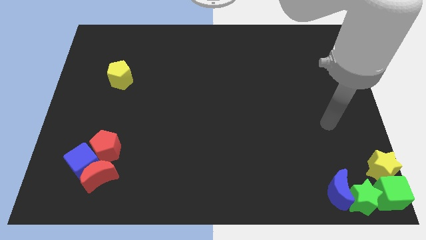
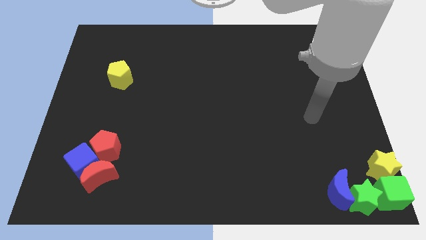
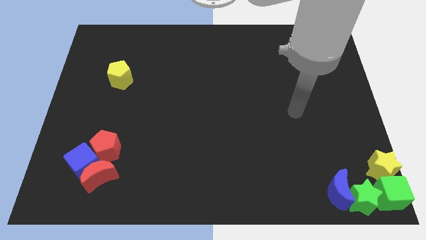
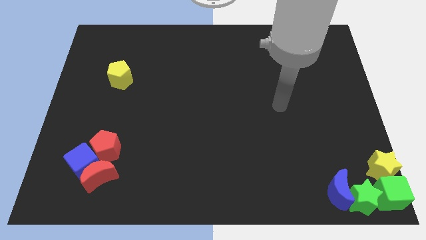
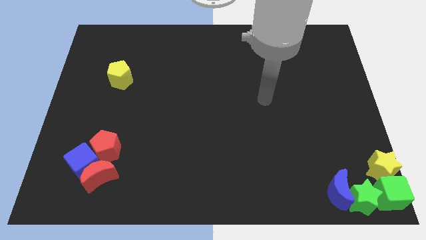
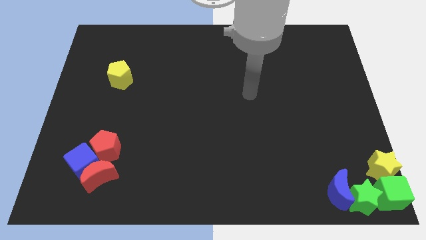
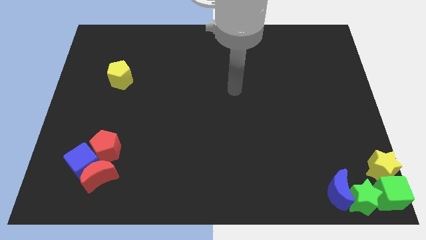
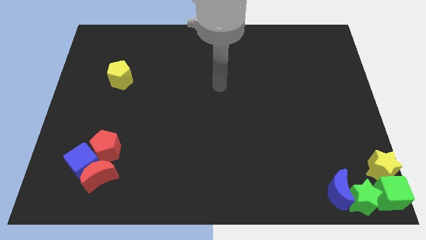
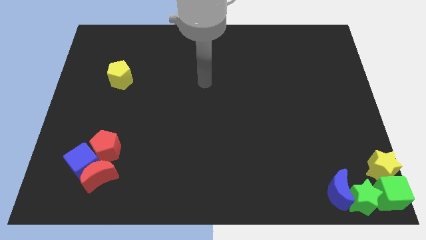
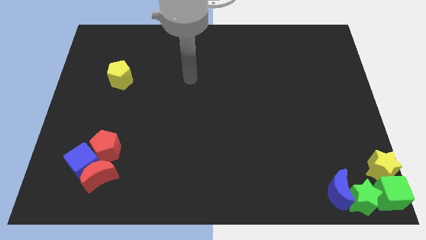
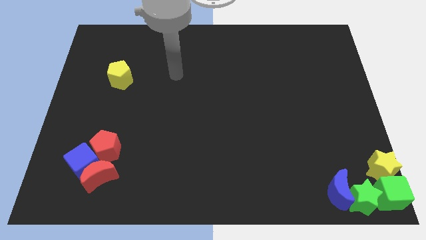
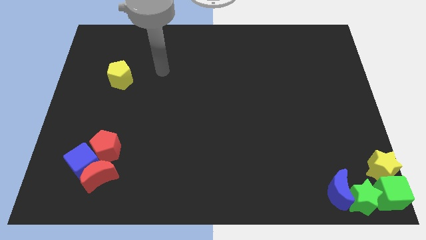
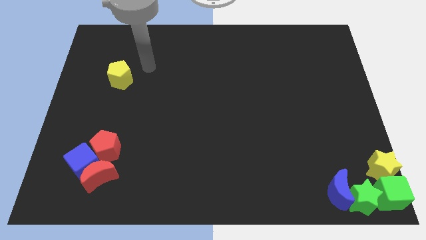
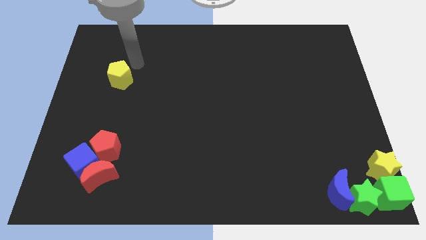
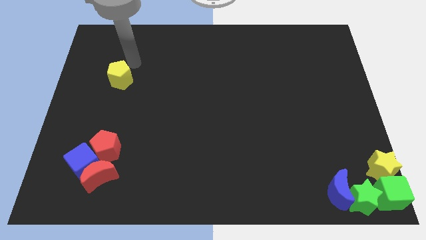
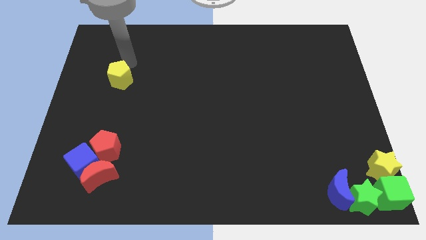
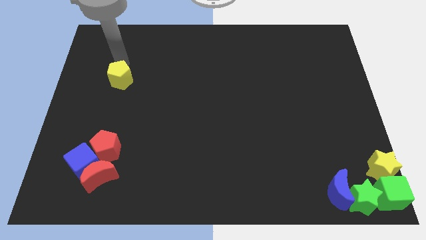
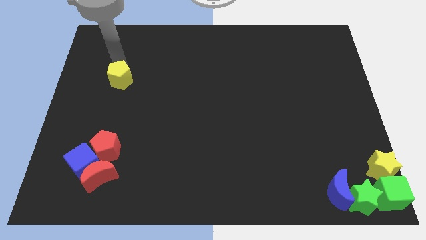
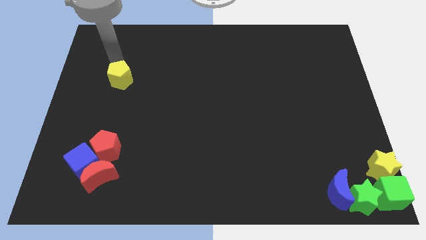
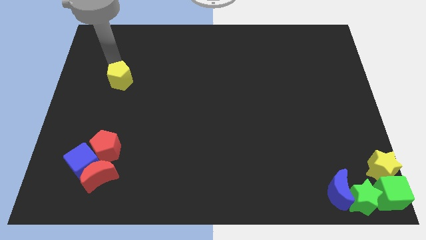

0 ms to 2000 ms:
touch the top of the yellow pentagon

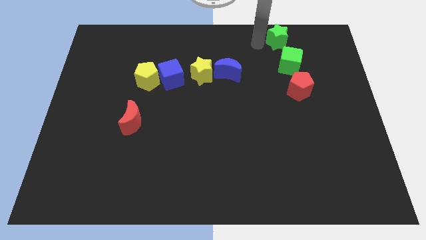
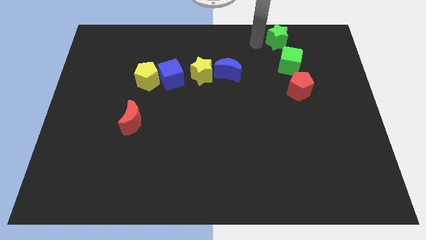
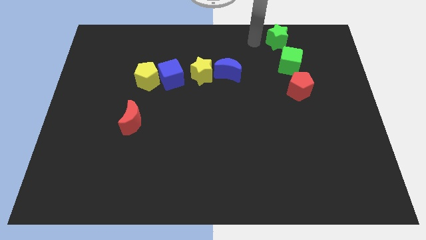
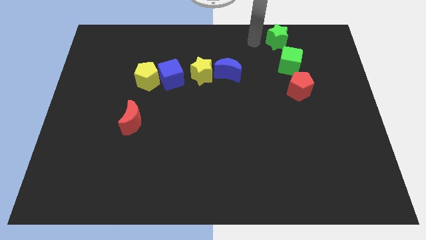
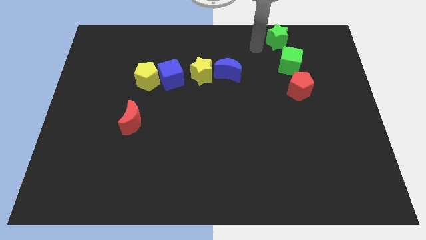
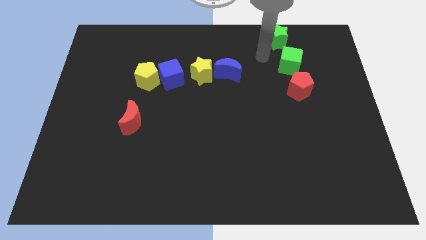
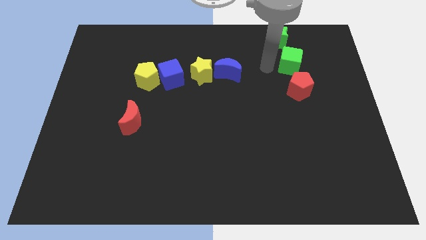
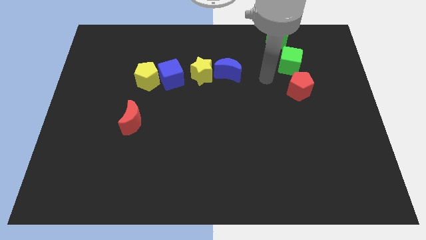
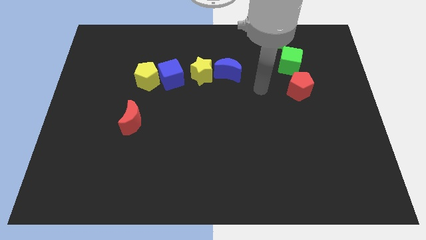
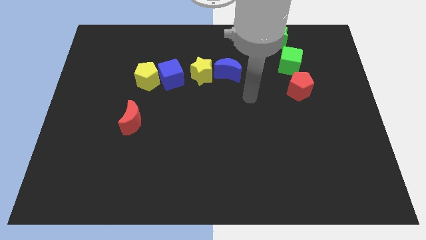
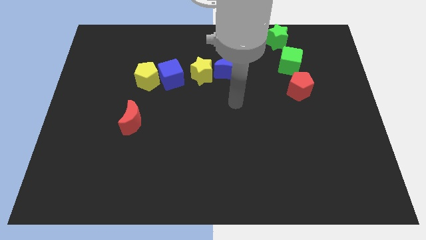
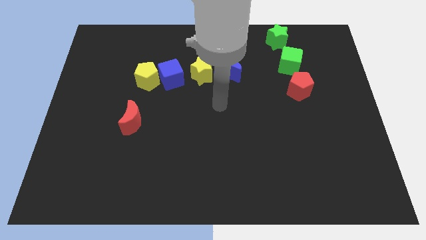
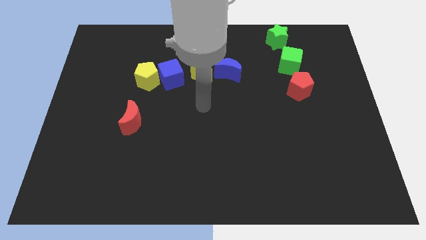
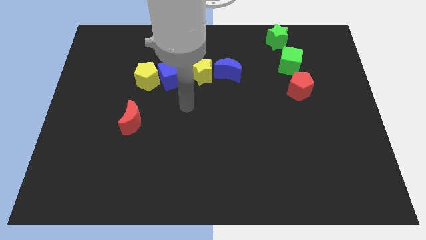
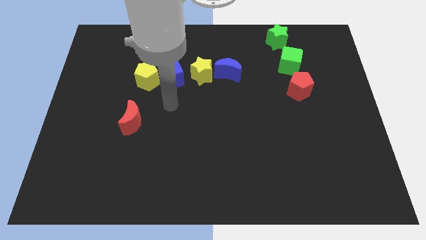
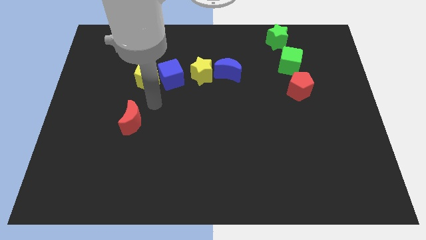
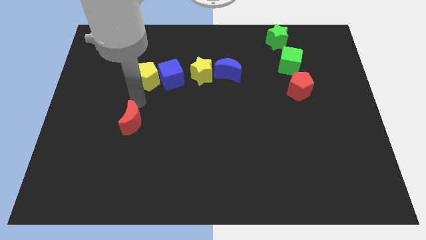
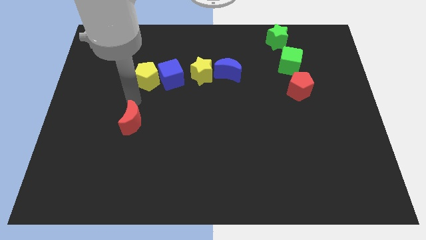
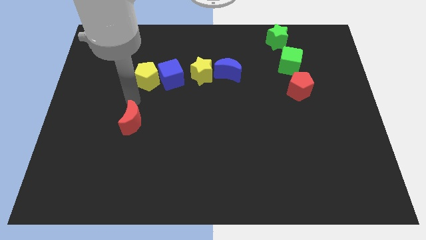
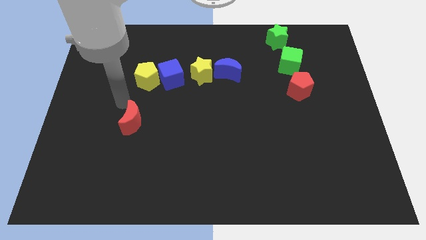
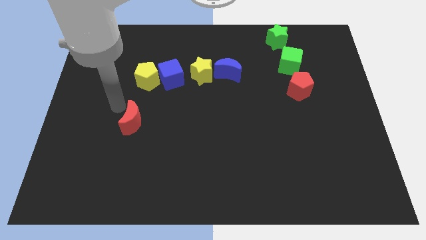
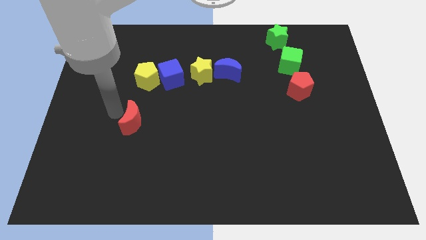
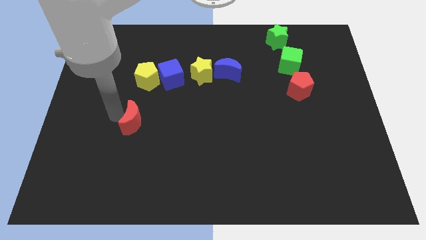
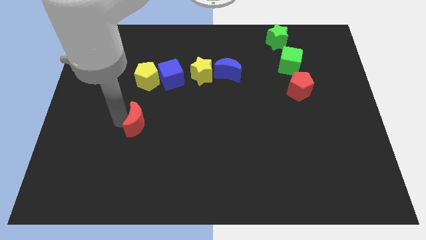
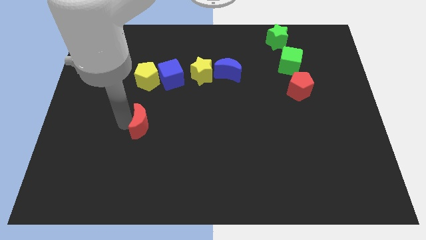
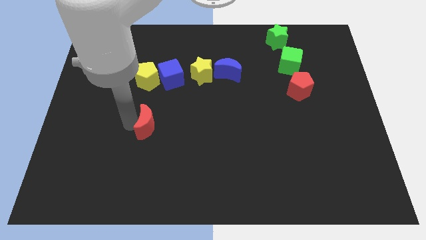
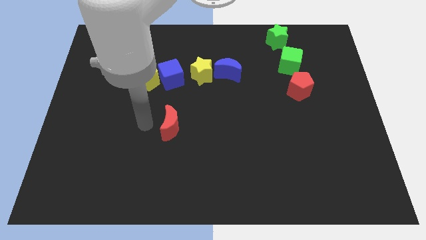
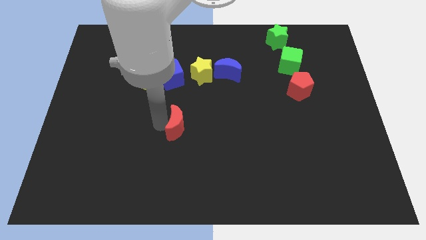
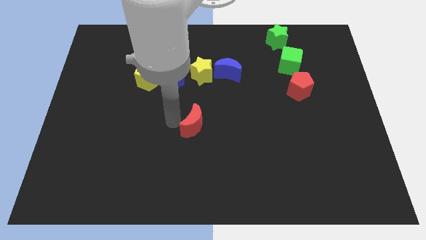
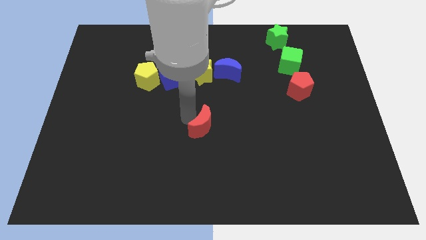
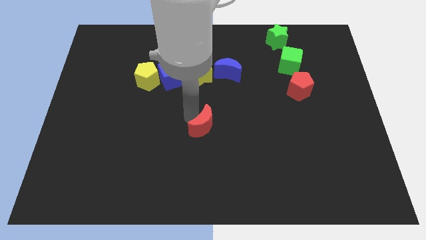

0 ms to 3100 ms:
place the red crescent at the center of the board

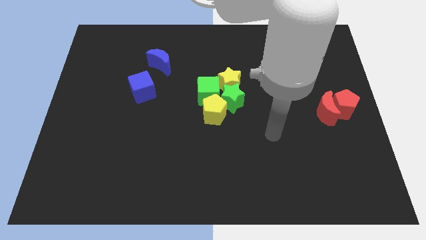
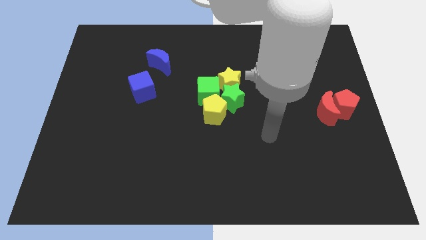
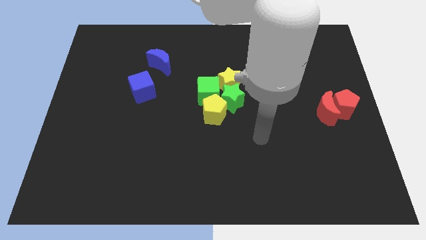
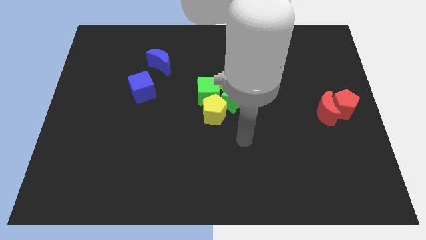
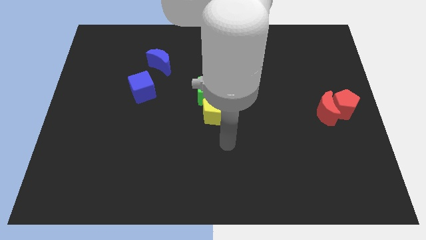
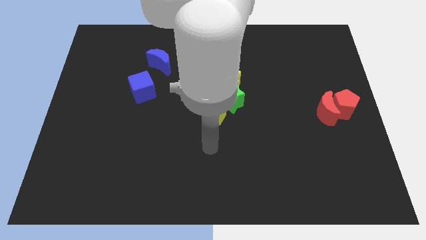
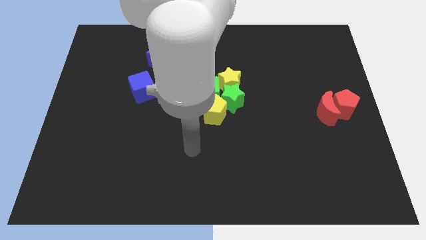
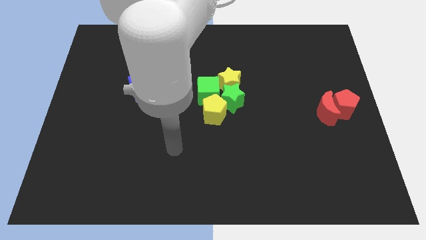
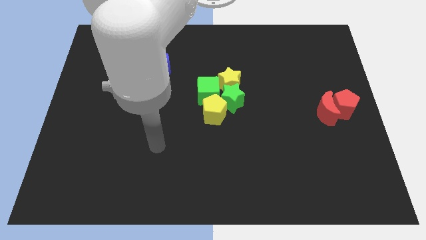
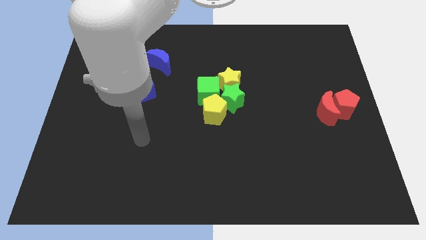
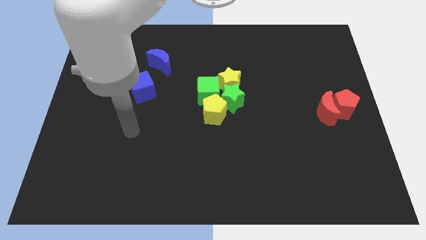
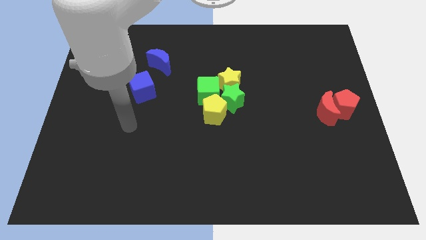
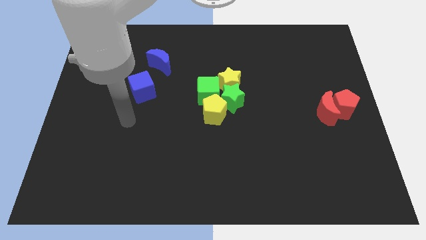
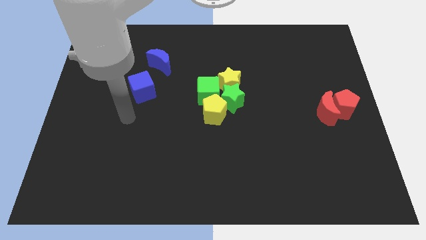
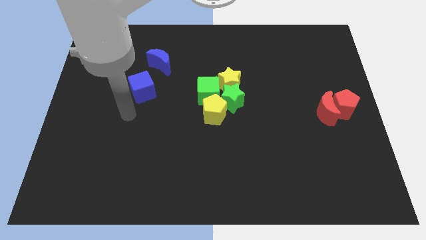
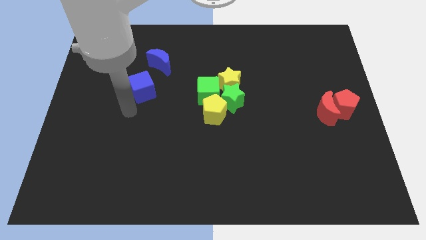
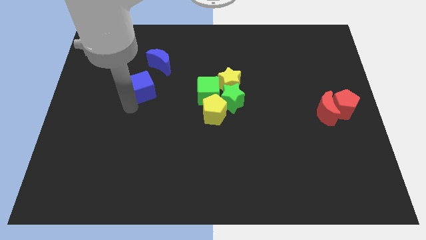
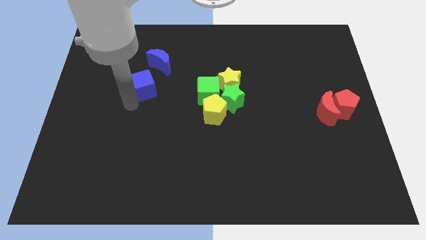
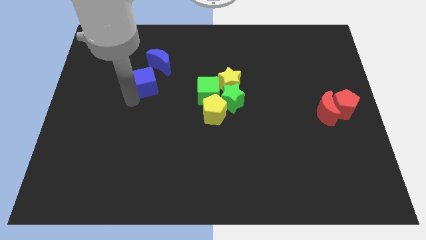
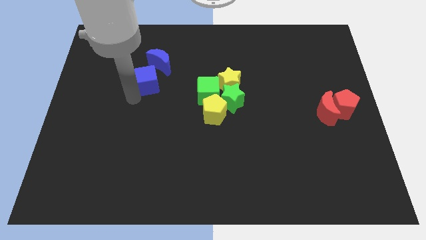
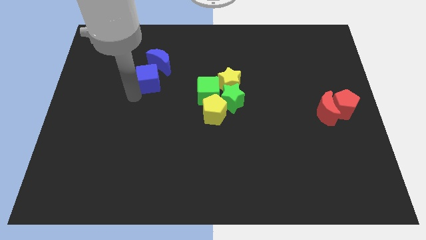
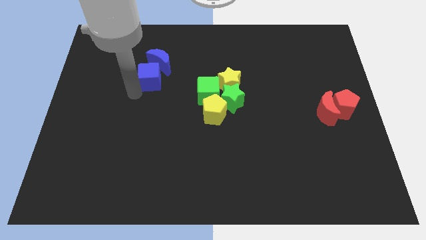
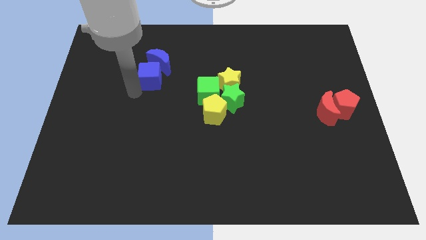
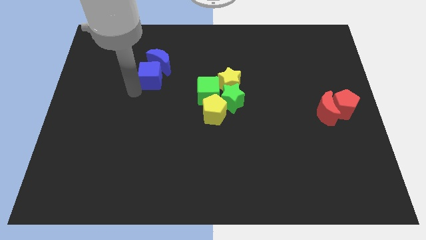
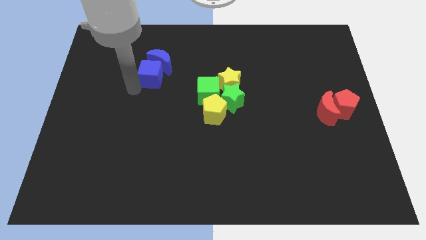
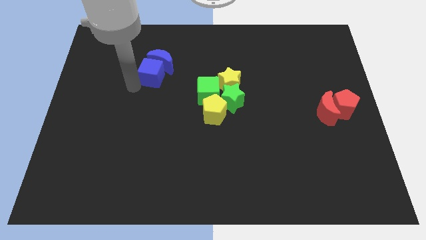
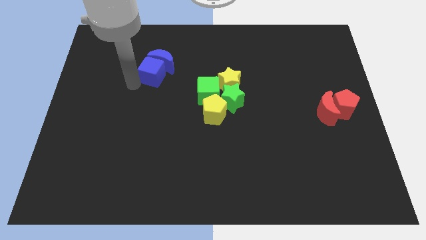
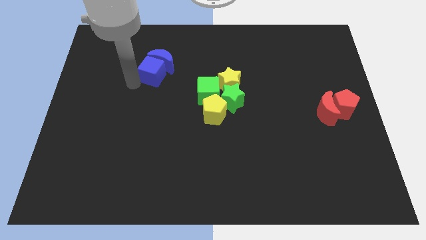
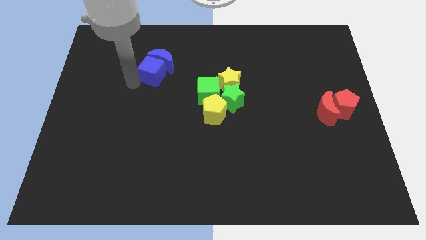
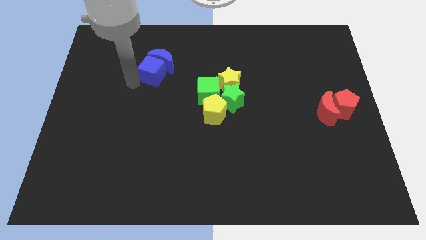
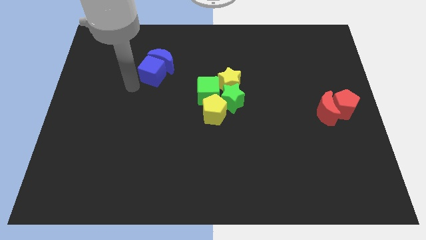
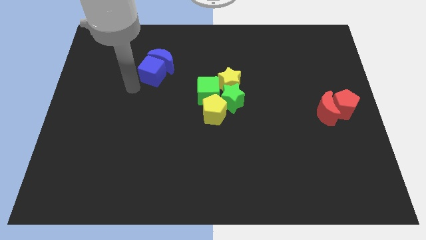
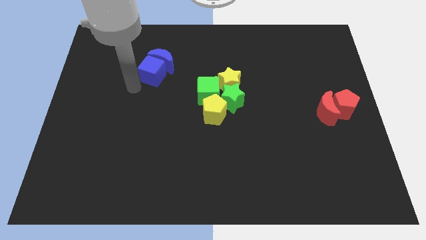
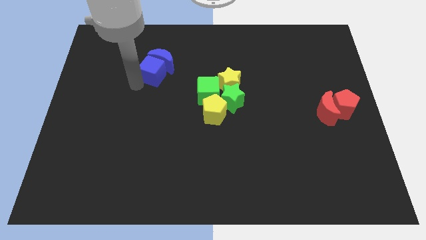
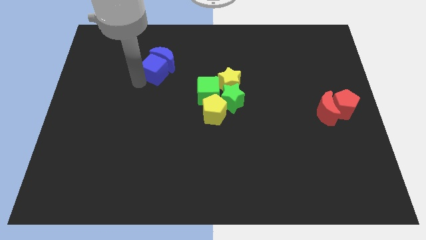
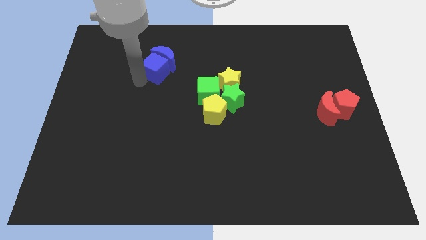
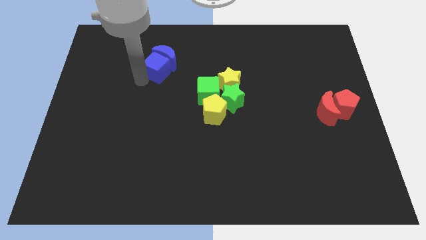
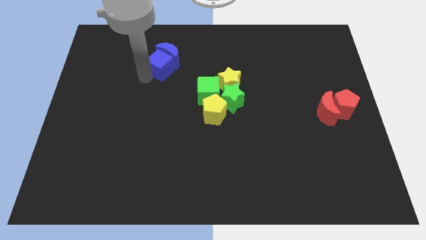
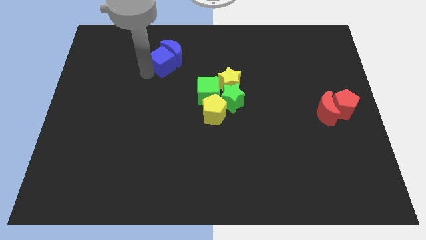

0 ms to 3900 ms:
push the blue cube into the blue crescent
